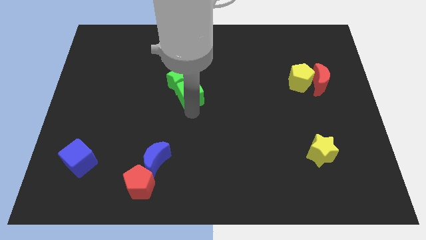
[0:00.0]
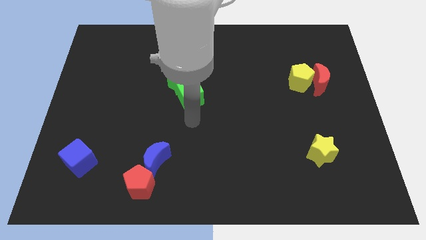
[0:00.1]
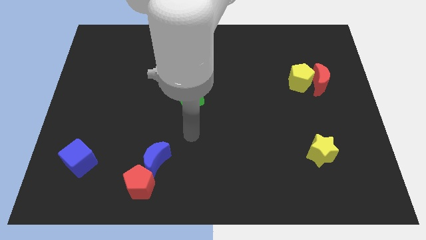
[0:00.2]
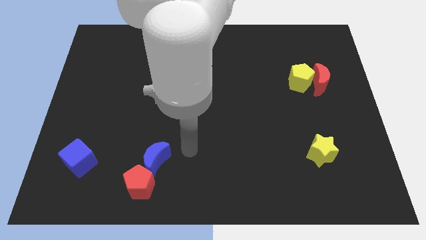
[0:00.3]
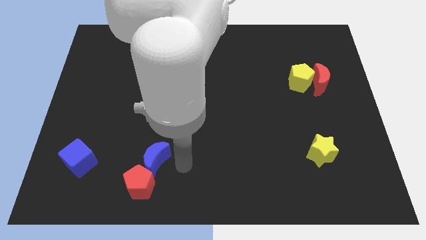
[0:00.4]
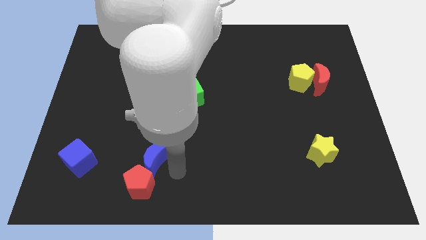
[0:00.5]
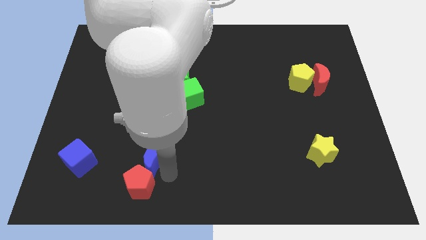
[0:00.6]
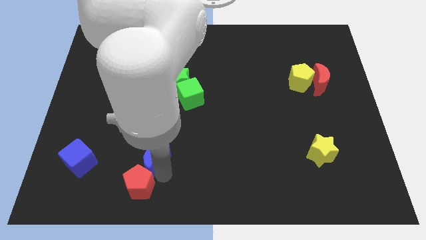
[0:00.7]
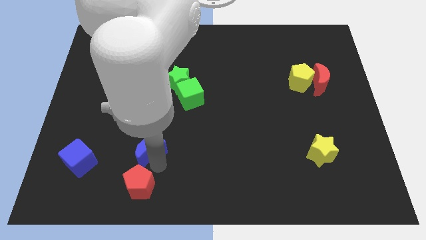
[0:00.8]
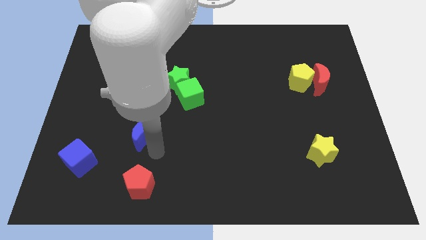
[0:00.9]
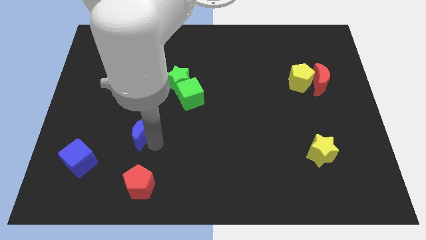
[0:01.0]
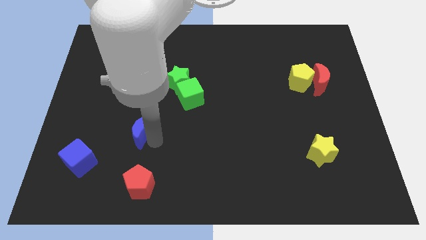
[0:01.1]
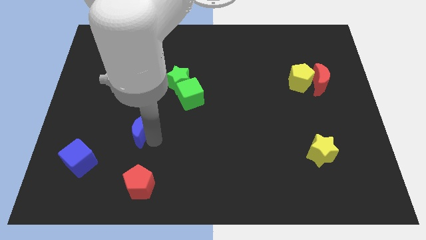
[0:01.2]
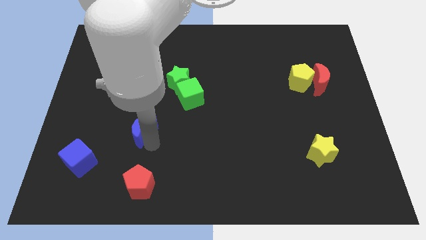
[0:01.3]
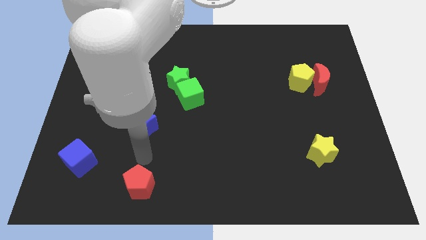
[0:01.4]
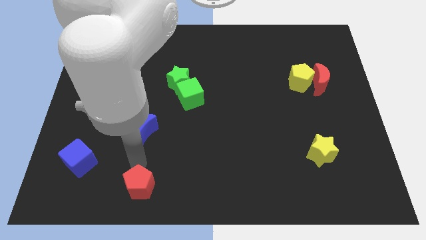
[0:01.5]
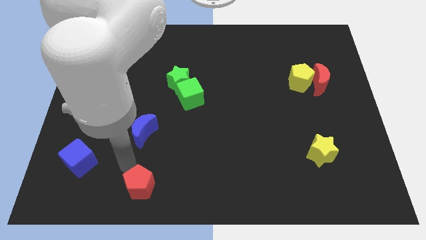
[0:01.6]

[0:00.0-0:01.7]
separate the blue moon from the red pentagon

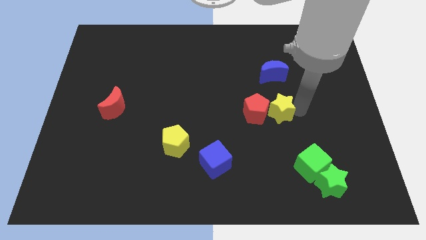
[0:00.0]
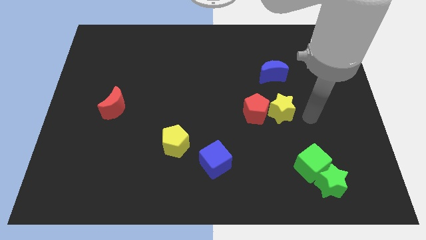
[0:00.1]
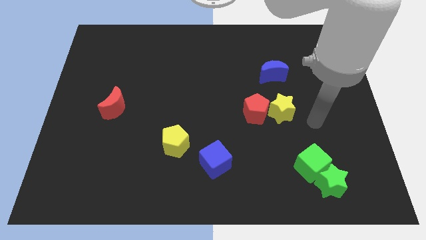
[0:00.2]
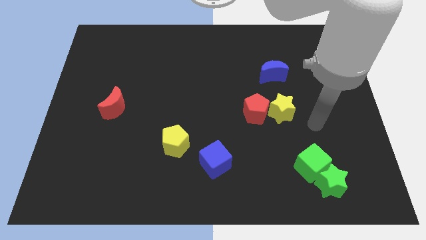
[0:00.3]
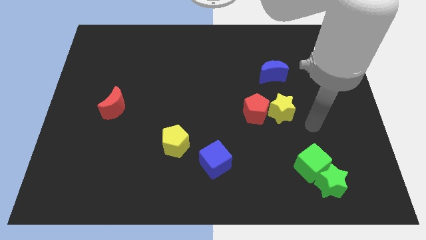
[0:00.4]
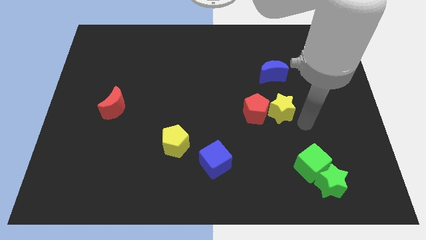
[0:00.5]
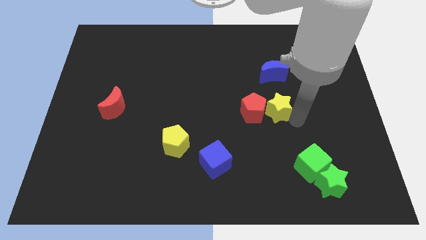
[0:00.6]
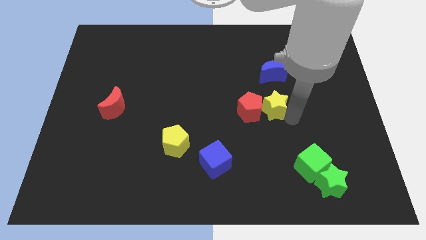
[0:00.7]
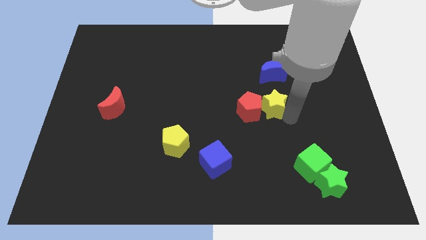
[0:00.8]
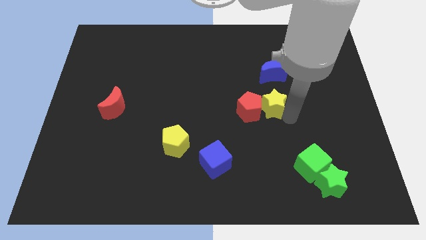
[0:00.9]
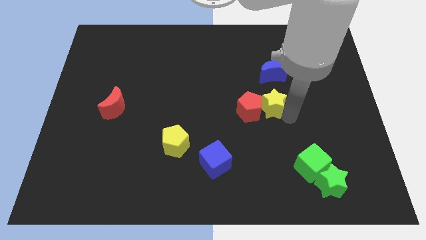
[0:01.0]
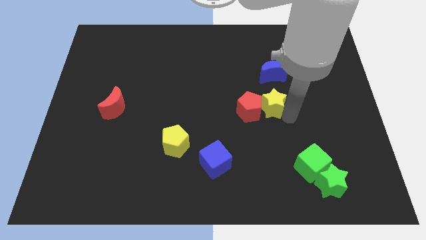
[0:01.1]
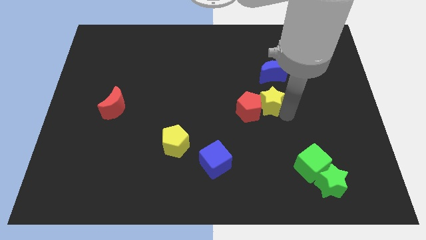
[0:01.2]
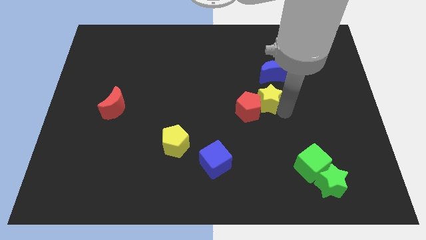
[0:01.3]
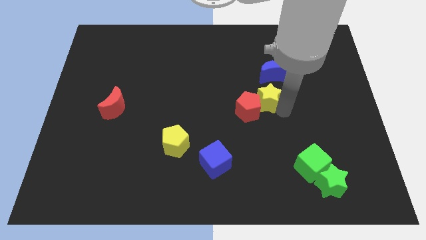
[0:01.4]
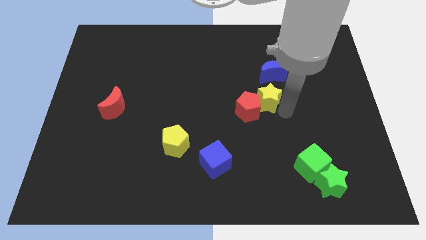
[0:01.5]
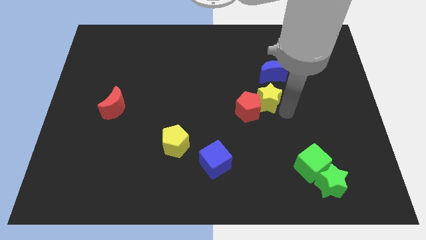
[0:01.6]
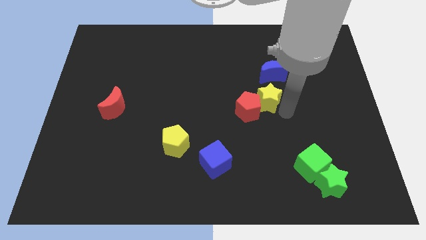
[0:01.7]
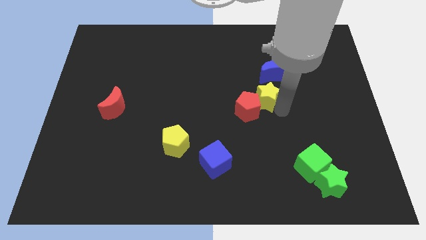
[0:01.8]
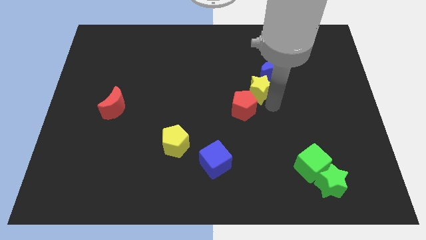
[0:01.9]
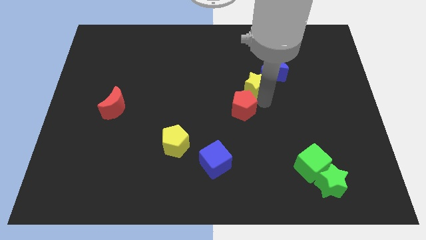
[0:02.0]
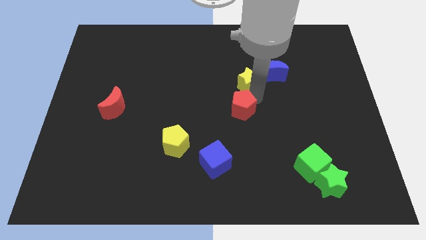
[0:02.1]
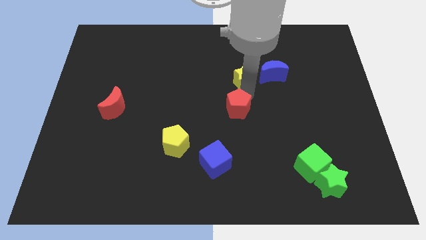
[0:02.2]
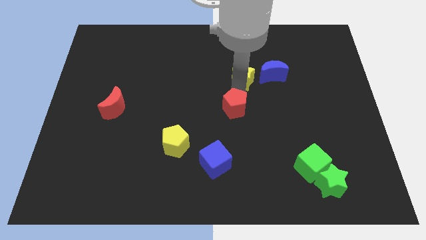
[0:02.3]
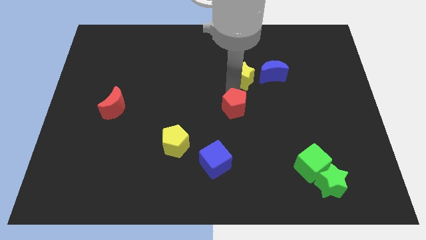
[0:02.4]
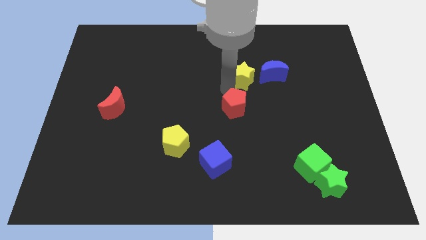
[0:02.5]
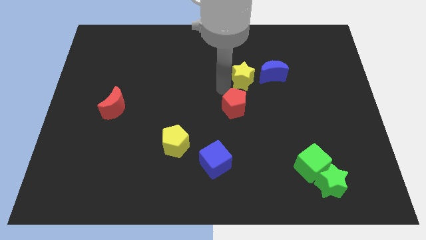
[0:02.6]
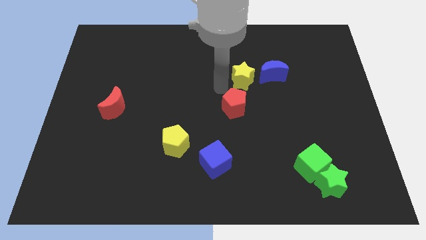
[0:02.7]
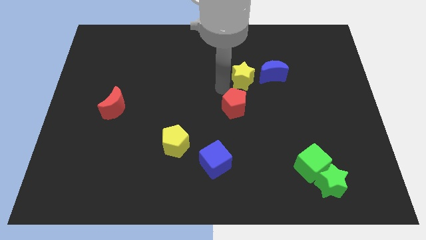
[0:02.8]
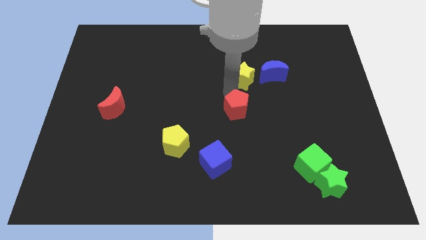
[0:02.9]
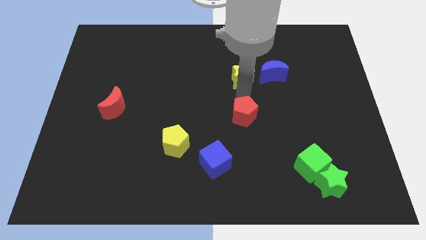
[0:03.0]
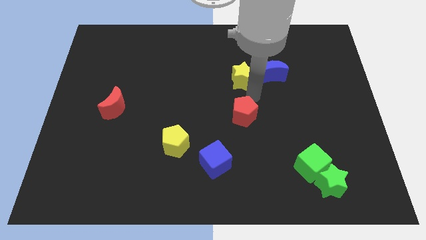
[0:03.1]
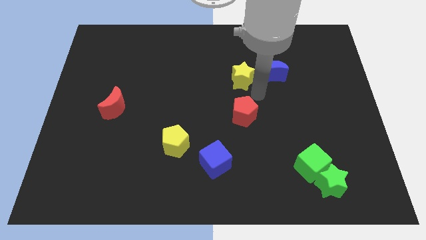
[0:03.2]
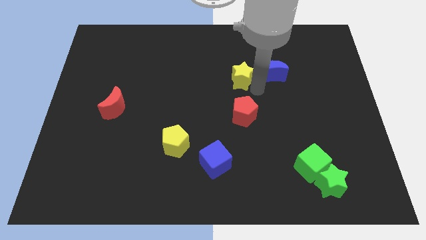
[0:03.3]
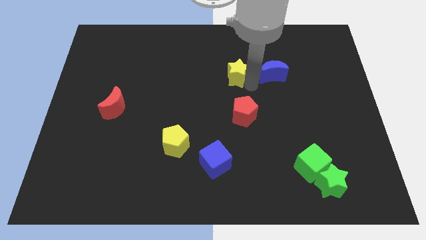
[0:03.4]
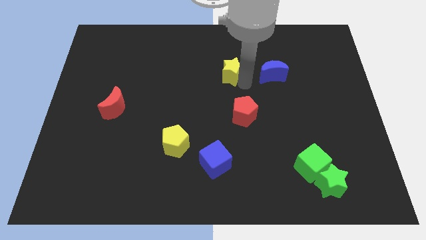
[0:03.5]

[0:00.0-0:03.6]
move the yellow star to the left side of the blue cube

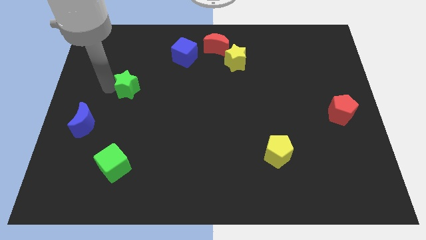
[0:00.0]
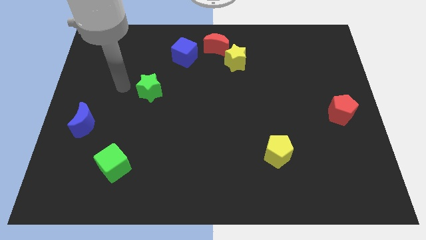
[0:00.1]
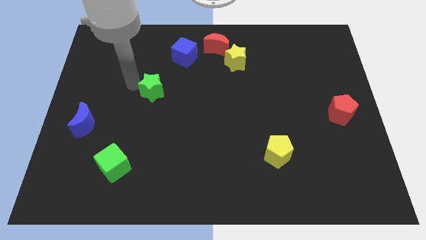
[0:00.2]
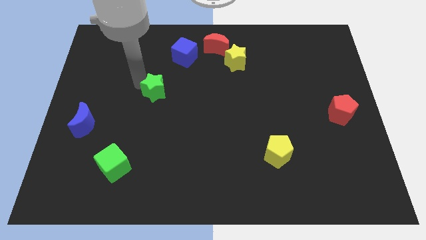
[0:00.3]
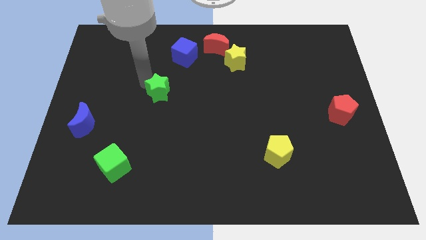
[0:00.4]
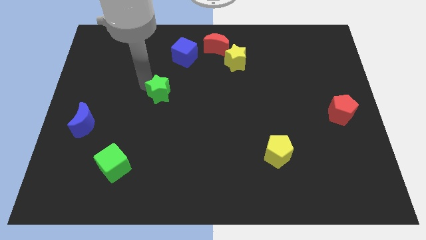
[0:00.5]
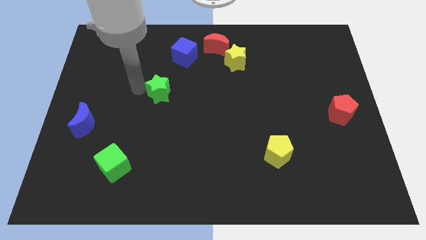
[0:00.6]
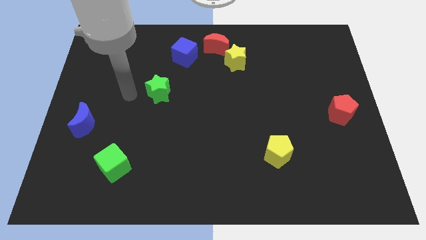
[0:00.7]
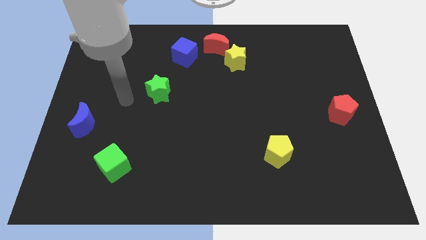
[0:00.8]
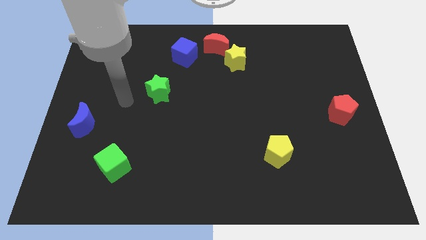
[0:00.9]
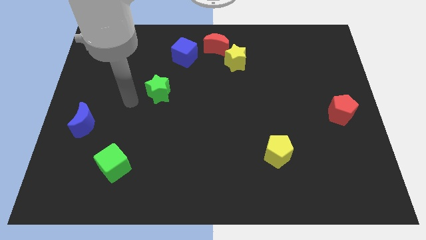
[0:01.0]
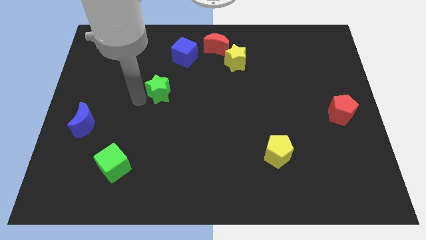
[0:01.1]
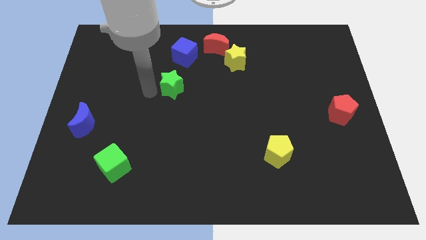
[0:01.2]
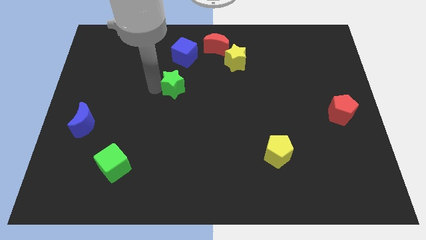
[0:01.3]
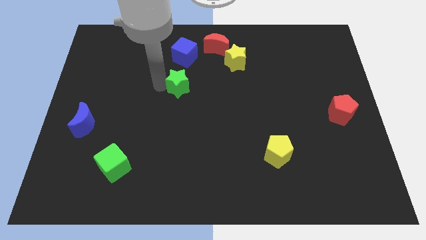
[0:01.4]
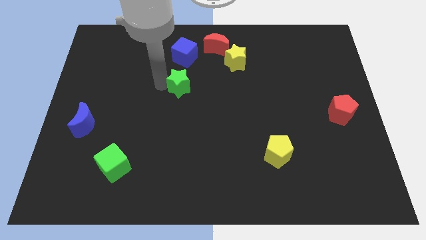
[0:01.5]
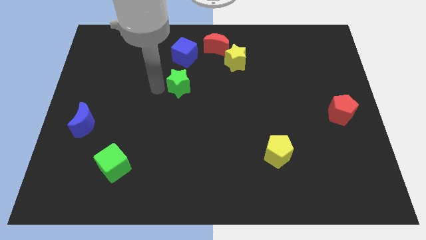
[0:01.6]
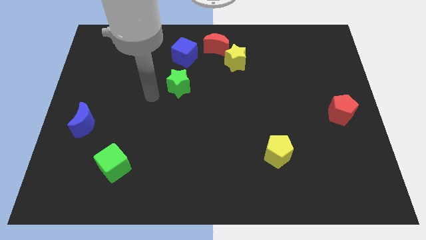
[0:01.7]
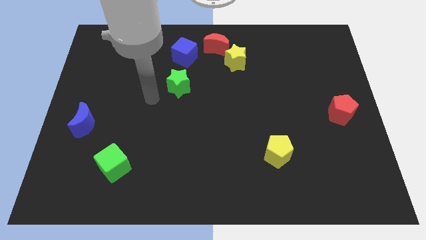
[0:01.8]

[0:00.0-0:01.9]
place green star to the bottom of blue cube

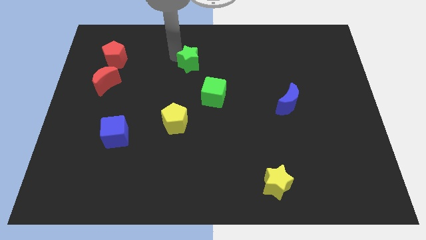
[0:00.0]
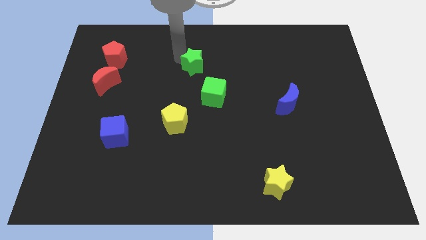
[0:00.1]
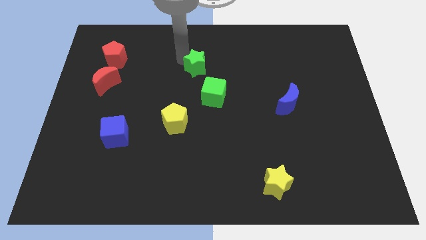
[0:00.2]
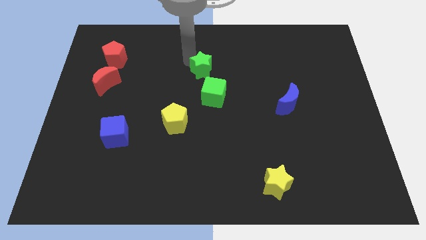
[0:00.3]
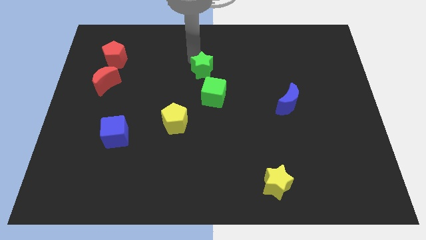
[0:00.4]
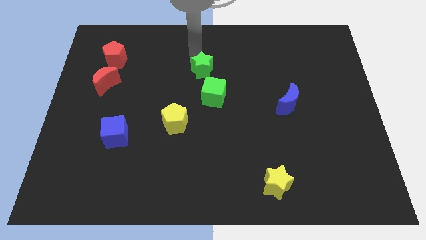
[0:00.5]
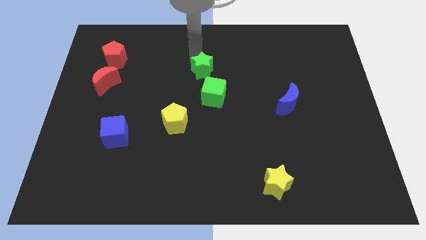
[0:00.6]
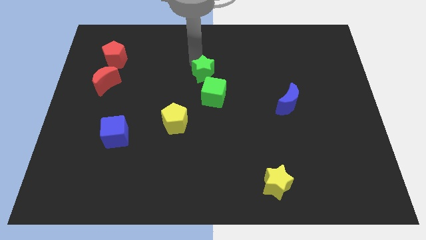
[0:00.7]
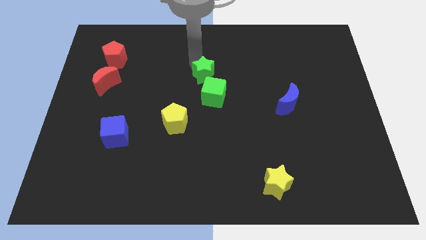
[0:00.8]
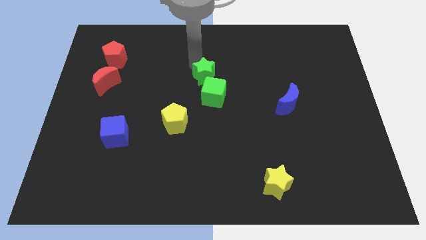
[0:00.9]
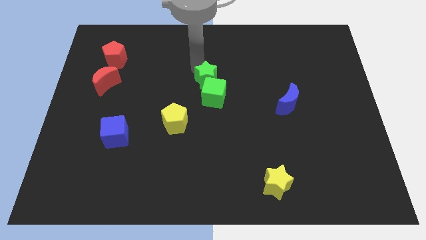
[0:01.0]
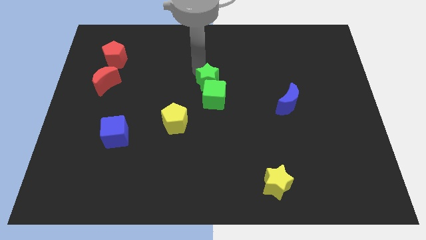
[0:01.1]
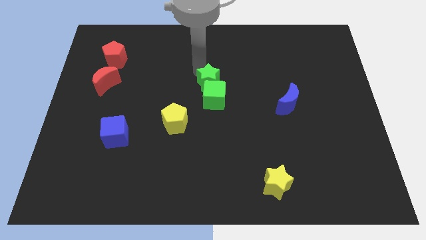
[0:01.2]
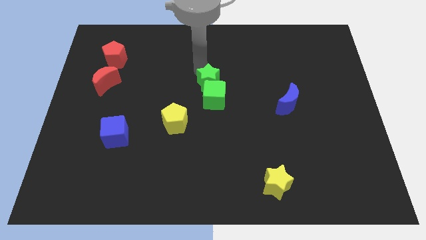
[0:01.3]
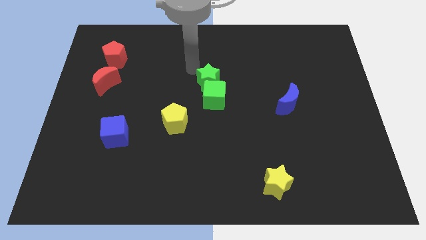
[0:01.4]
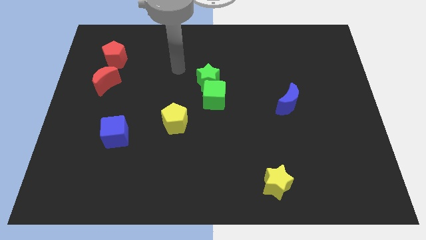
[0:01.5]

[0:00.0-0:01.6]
place green star above the green cube

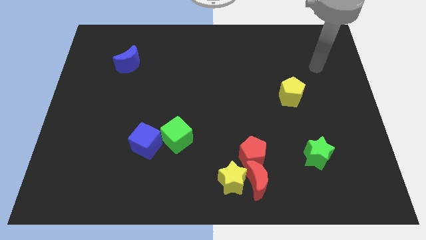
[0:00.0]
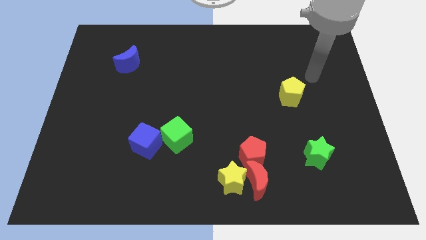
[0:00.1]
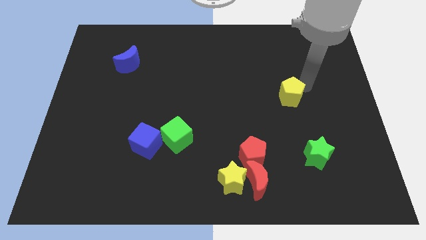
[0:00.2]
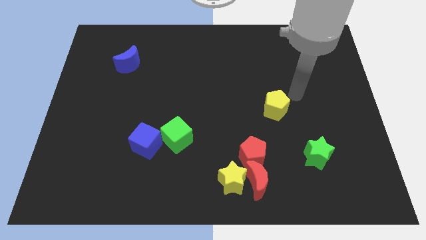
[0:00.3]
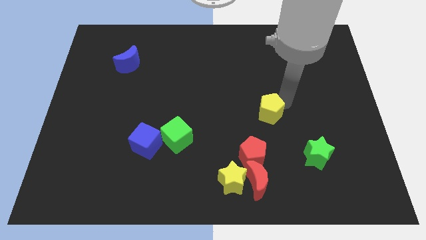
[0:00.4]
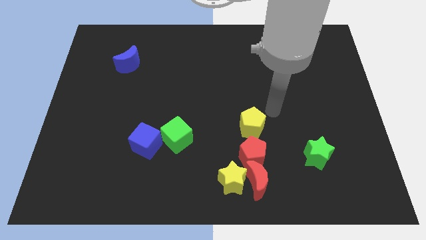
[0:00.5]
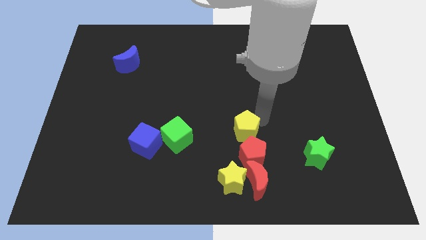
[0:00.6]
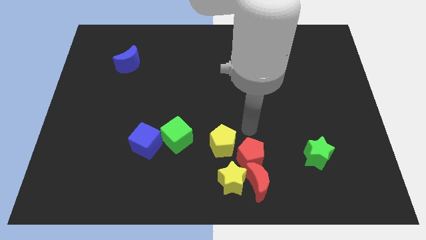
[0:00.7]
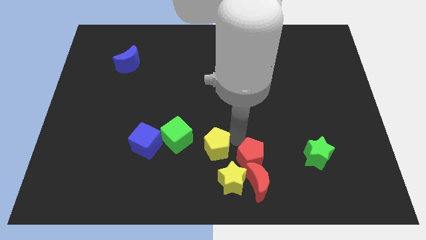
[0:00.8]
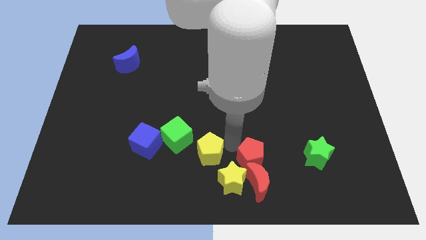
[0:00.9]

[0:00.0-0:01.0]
put yellow pentagon in between red pentagon and green cube
